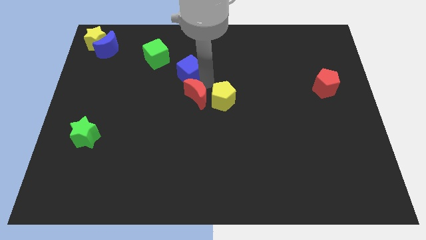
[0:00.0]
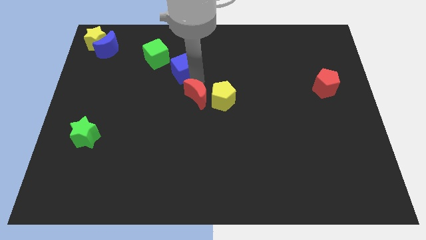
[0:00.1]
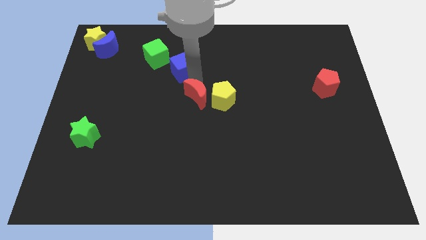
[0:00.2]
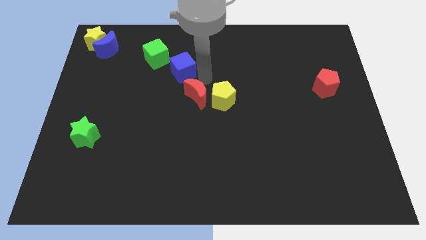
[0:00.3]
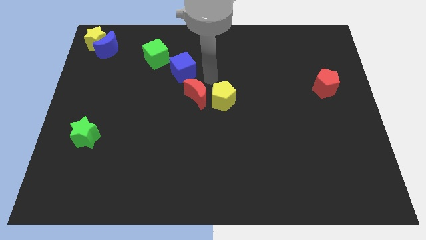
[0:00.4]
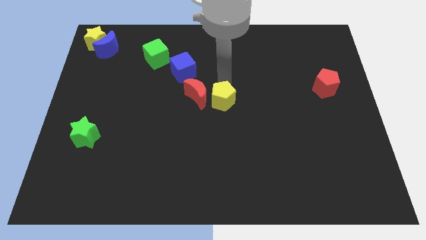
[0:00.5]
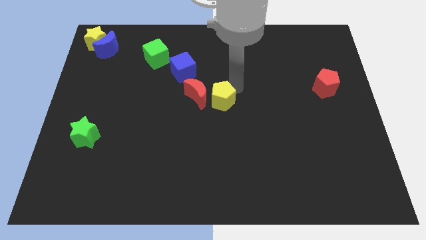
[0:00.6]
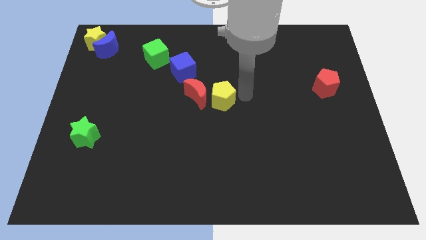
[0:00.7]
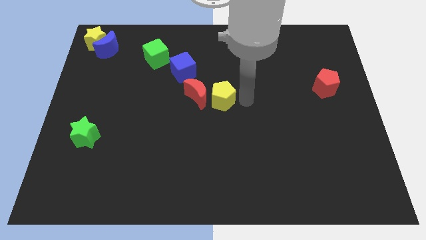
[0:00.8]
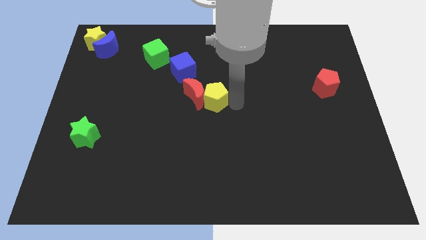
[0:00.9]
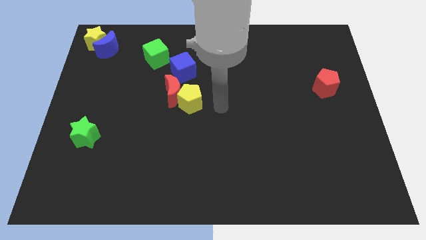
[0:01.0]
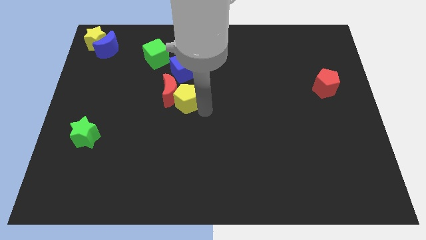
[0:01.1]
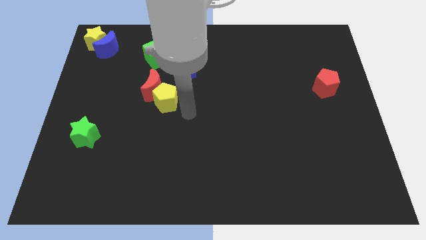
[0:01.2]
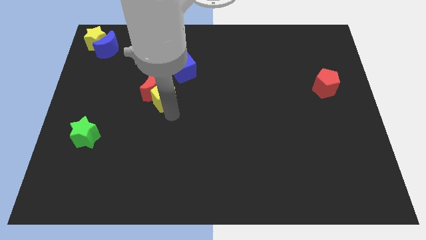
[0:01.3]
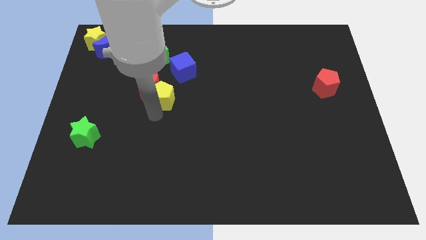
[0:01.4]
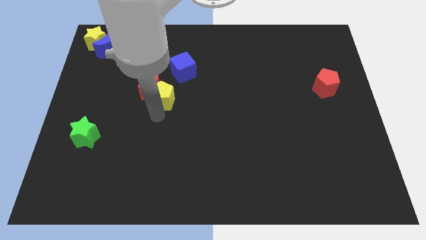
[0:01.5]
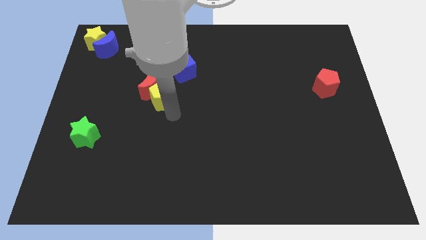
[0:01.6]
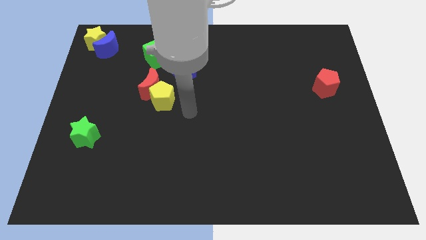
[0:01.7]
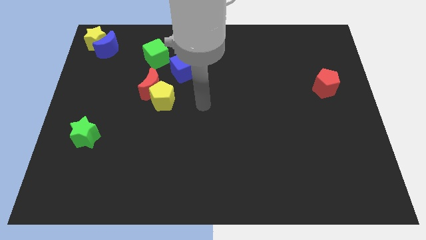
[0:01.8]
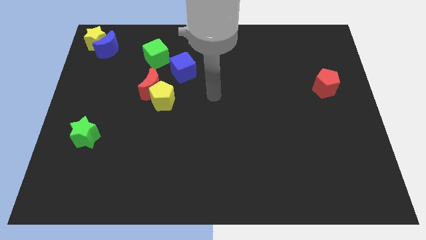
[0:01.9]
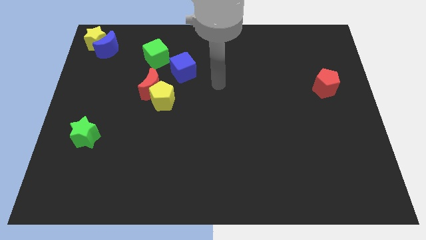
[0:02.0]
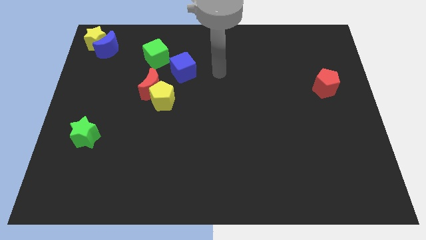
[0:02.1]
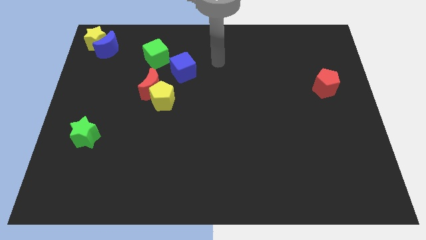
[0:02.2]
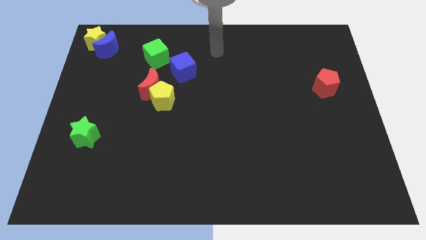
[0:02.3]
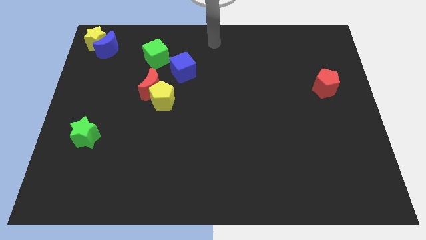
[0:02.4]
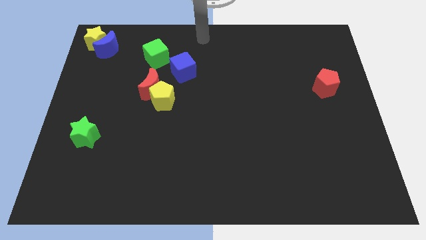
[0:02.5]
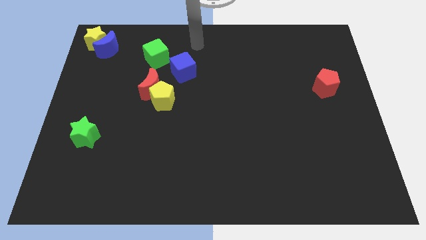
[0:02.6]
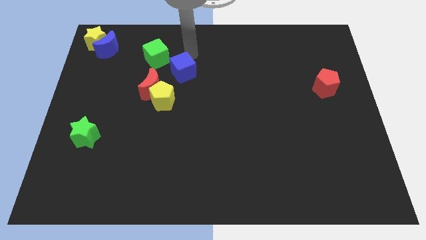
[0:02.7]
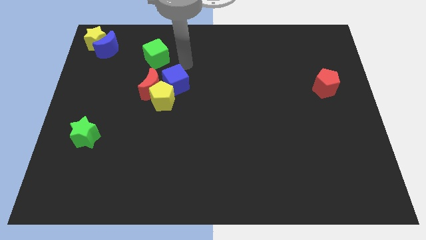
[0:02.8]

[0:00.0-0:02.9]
push the yellow pentagon into the red crescent to the left

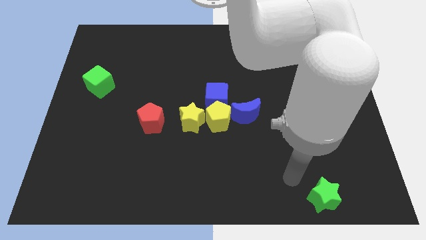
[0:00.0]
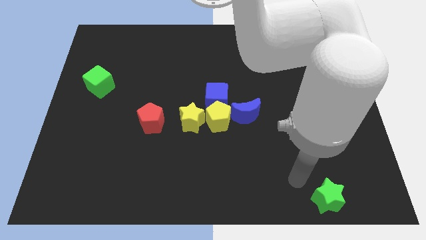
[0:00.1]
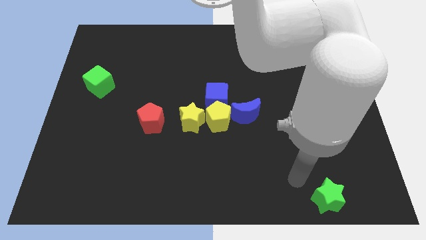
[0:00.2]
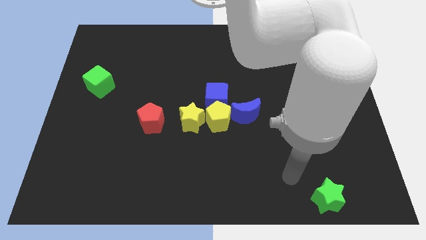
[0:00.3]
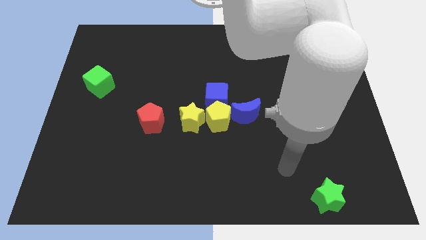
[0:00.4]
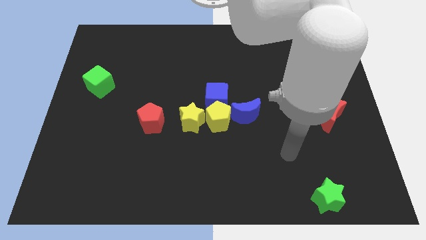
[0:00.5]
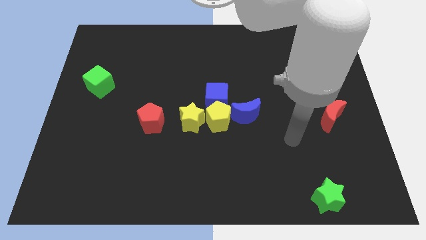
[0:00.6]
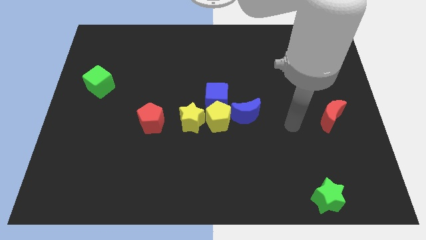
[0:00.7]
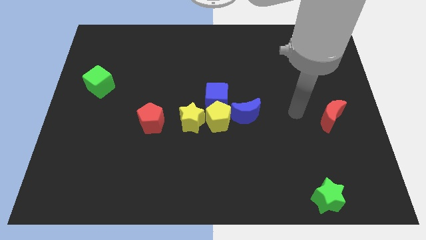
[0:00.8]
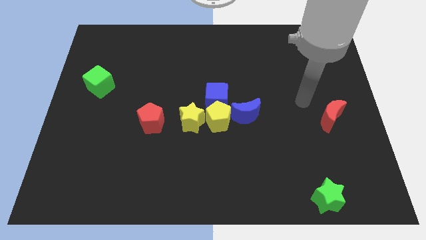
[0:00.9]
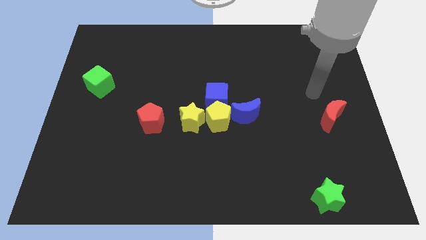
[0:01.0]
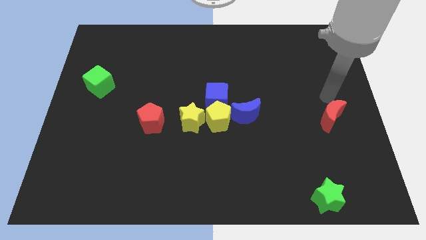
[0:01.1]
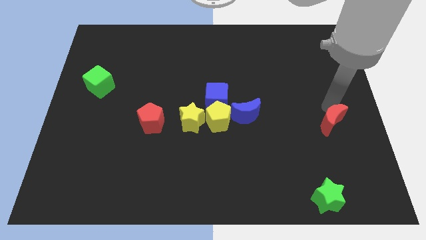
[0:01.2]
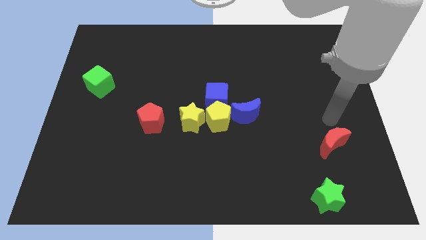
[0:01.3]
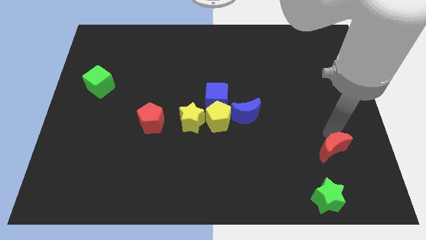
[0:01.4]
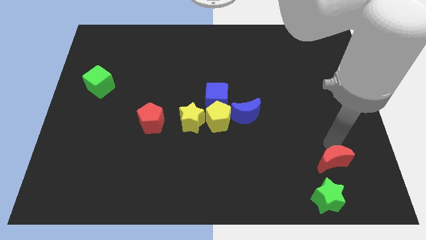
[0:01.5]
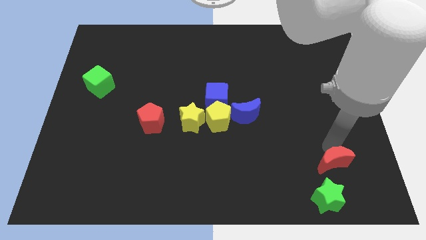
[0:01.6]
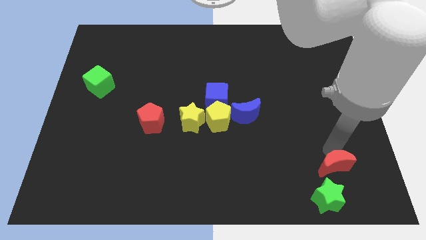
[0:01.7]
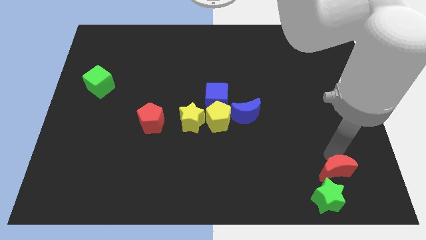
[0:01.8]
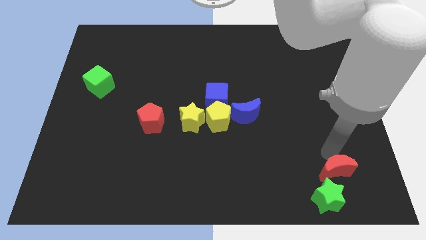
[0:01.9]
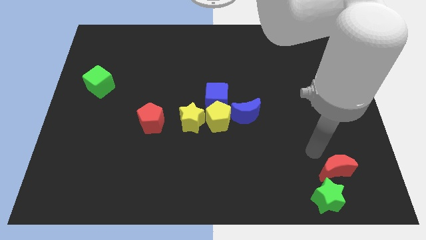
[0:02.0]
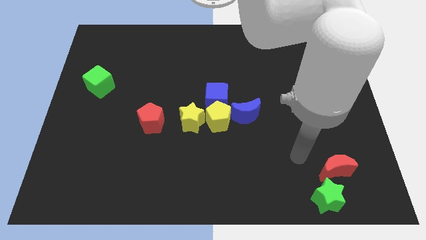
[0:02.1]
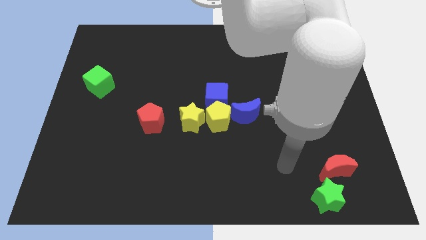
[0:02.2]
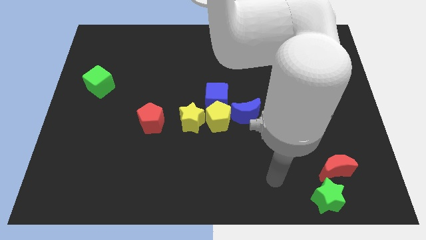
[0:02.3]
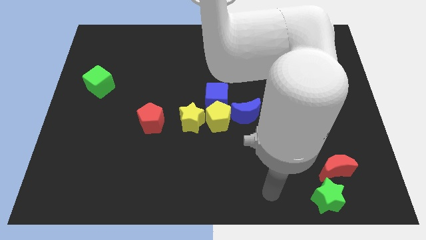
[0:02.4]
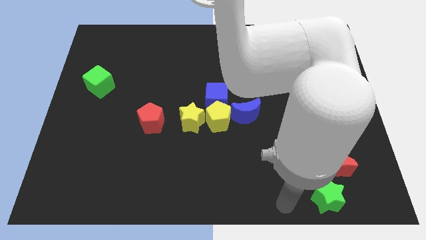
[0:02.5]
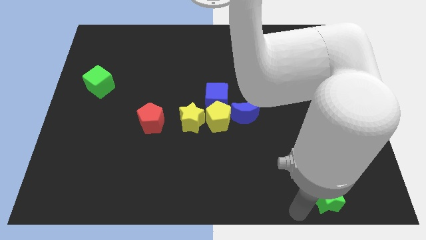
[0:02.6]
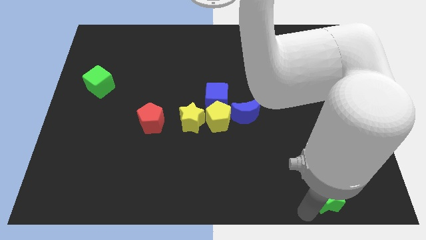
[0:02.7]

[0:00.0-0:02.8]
place the red moon to the top of green star

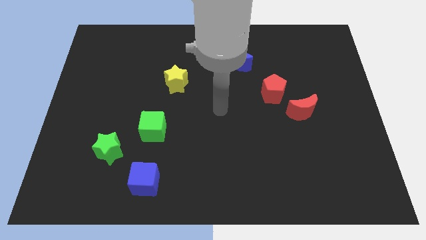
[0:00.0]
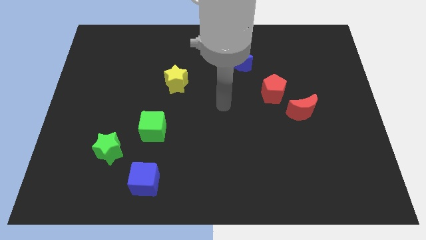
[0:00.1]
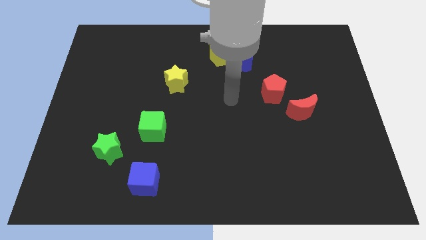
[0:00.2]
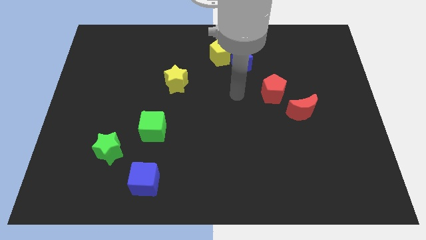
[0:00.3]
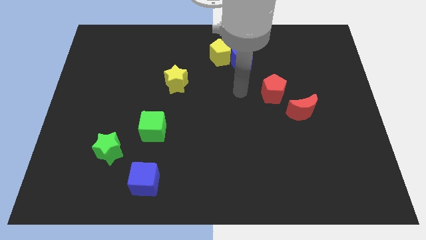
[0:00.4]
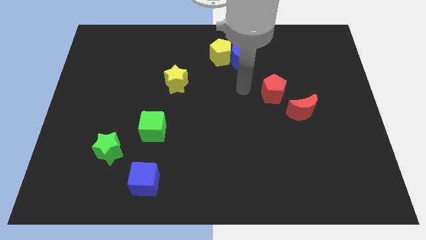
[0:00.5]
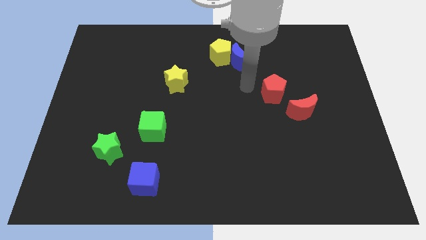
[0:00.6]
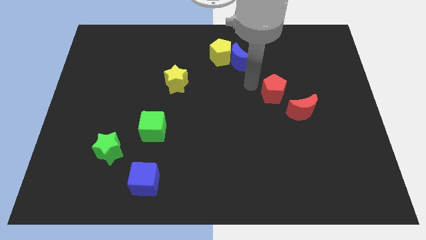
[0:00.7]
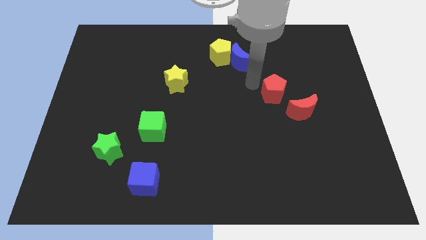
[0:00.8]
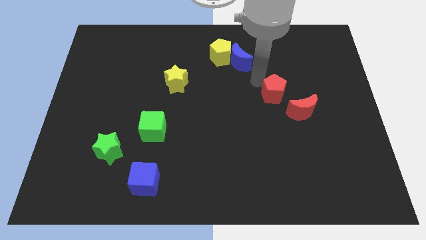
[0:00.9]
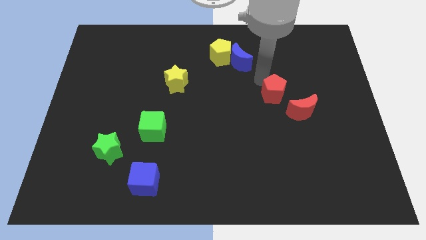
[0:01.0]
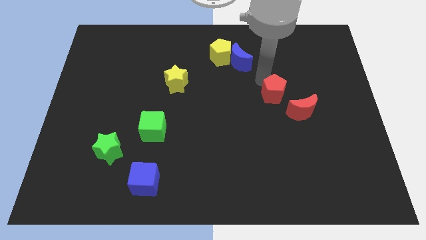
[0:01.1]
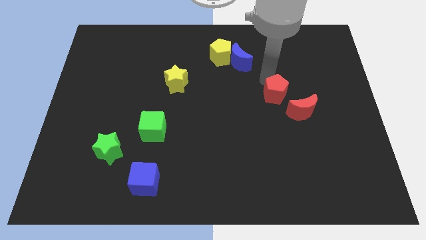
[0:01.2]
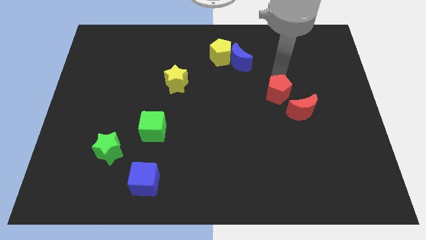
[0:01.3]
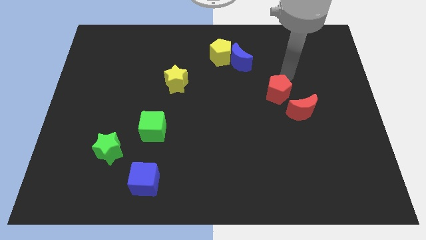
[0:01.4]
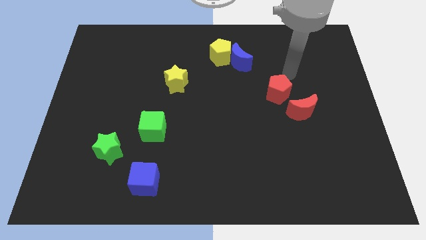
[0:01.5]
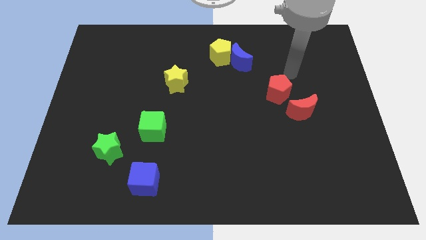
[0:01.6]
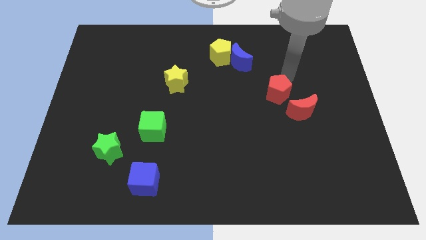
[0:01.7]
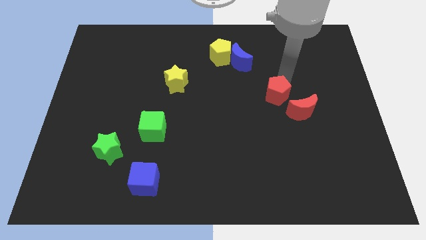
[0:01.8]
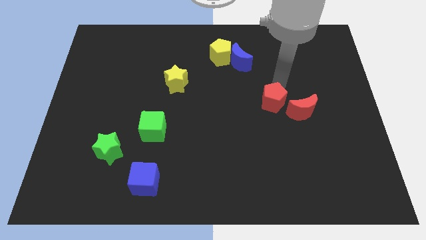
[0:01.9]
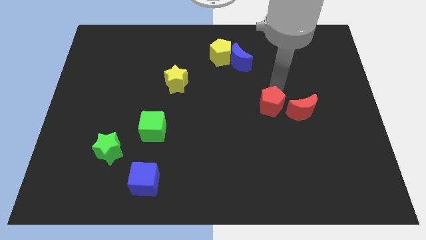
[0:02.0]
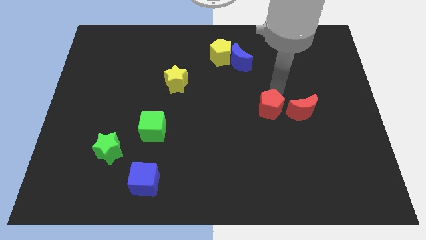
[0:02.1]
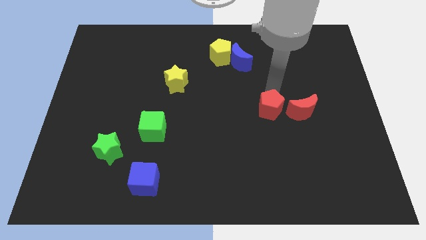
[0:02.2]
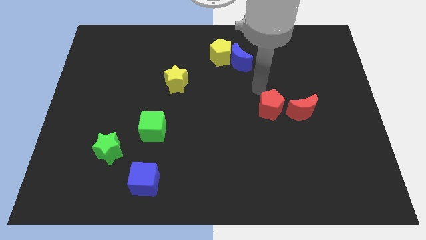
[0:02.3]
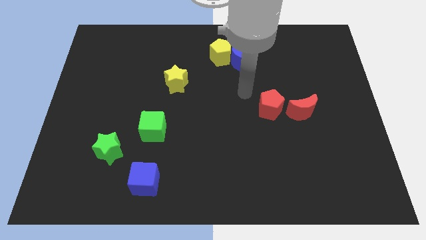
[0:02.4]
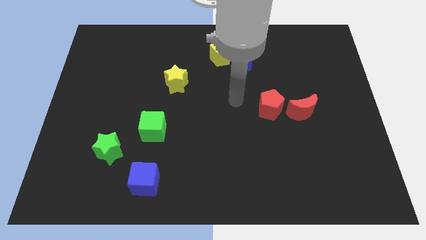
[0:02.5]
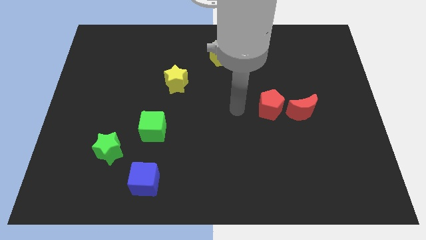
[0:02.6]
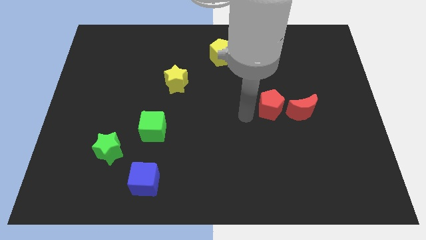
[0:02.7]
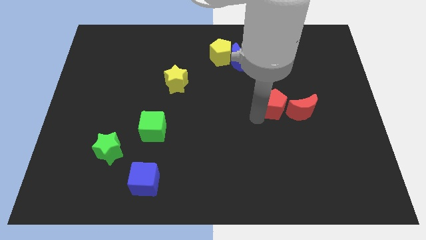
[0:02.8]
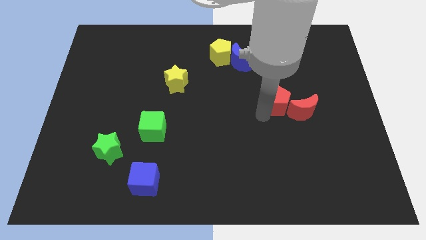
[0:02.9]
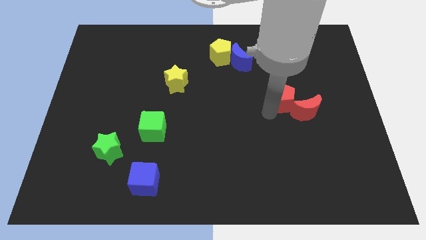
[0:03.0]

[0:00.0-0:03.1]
slightly push the red pentagon towards the red crescent

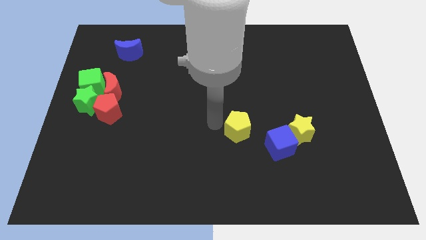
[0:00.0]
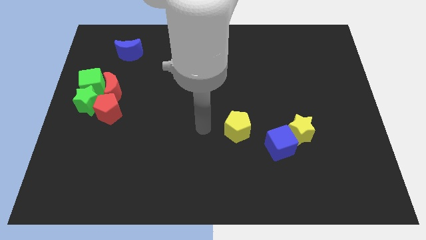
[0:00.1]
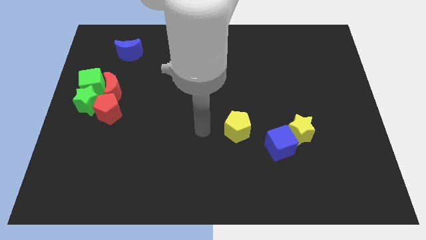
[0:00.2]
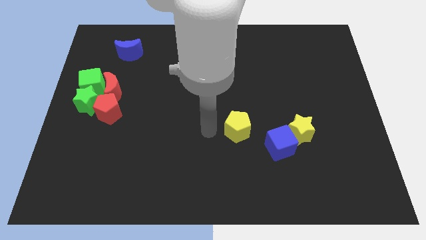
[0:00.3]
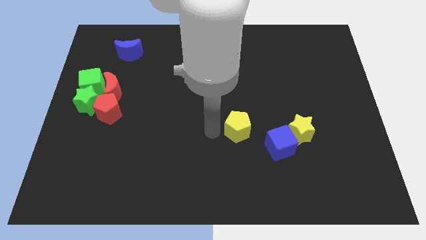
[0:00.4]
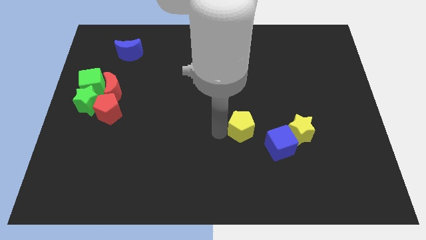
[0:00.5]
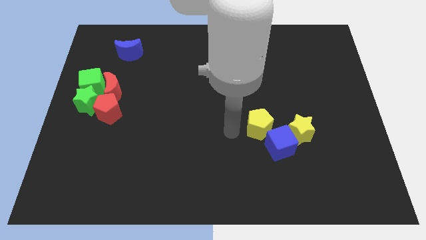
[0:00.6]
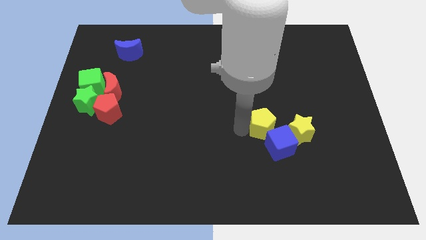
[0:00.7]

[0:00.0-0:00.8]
take the yellow pentagon close to the top of the blue cube
